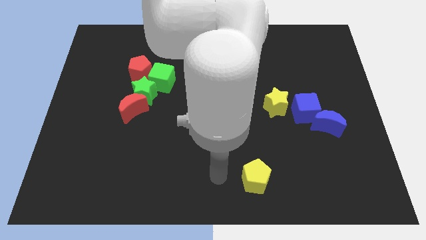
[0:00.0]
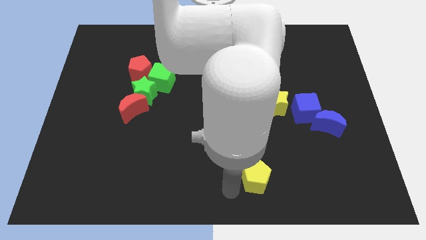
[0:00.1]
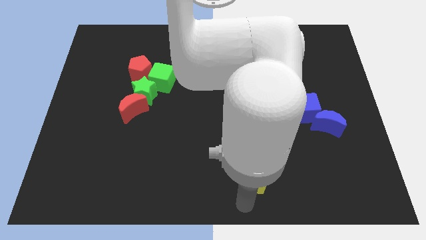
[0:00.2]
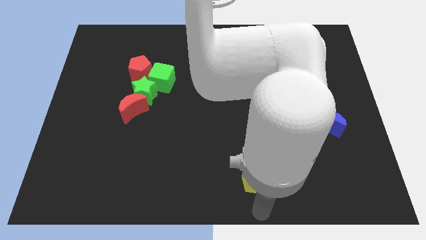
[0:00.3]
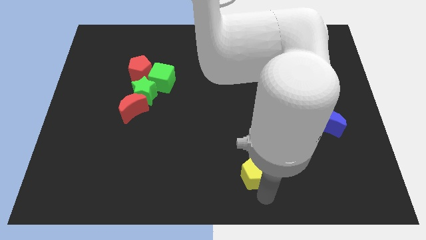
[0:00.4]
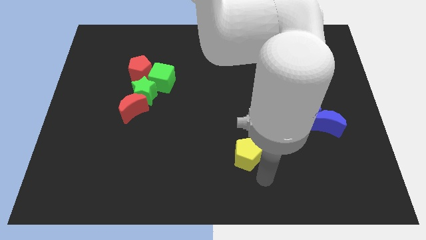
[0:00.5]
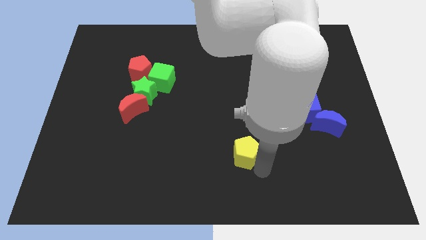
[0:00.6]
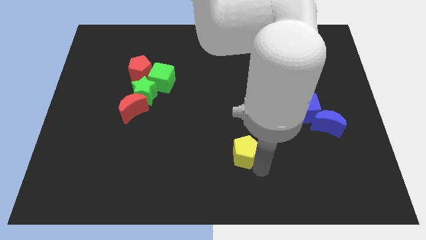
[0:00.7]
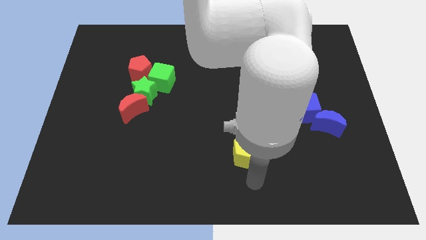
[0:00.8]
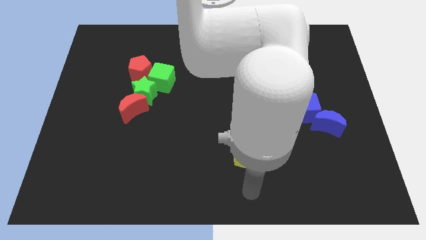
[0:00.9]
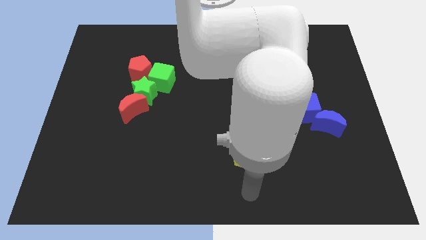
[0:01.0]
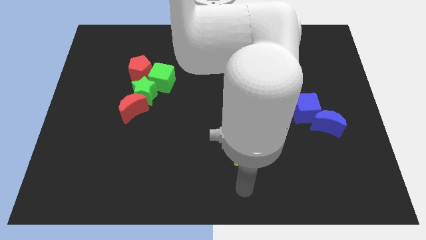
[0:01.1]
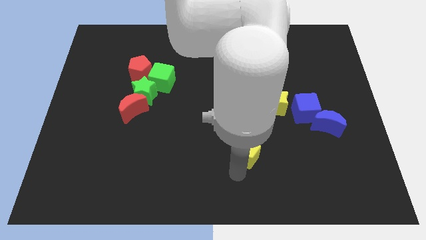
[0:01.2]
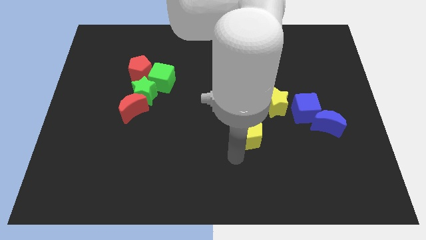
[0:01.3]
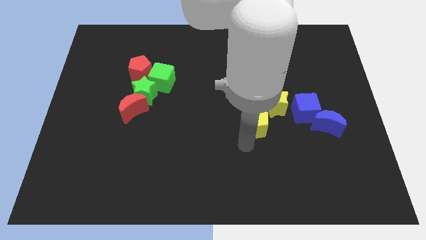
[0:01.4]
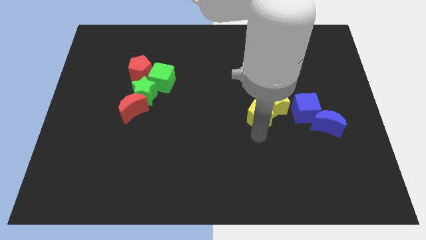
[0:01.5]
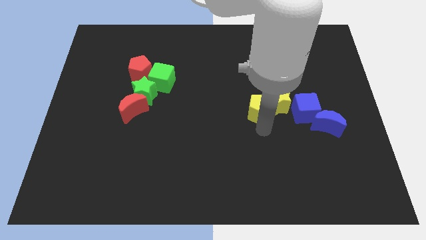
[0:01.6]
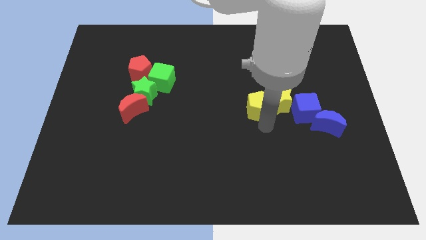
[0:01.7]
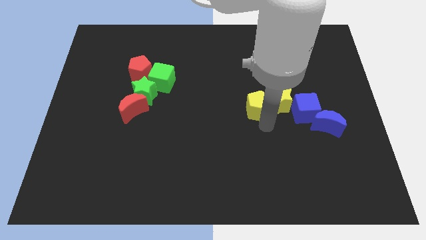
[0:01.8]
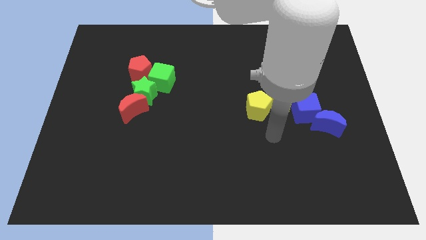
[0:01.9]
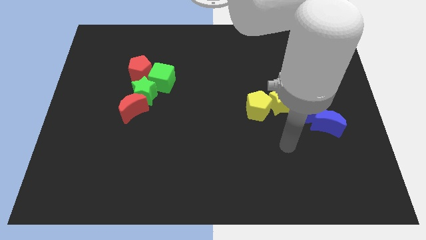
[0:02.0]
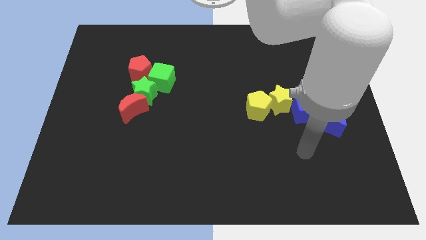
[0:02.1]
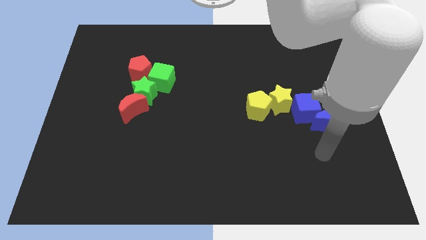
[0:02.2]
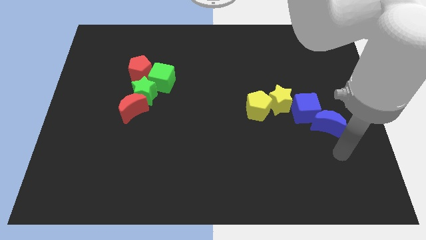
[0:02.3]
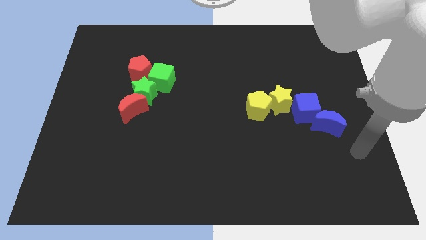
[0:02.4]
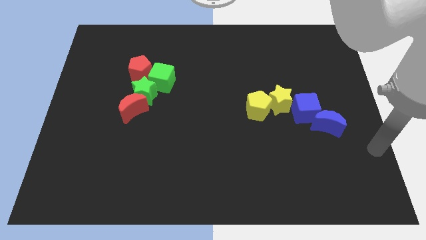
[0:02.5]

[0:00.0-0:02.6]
move the yellow pentagon into the yellow star

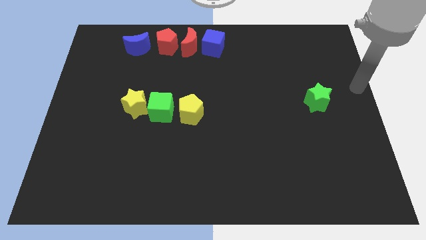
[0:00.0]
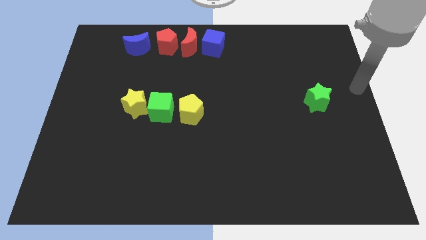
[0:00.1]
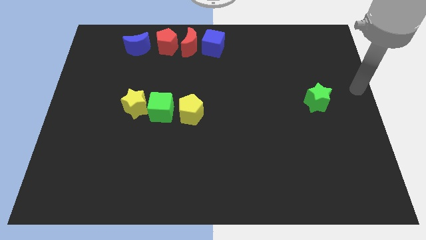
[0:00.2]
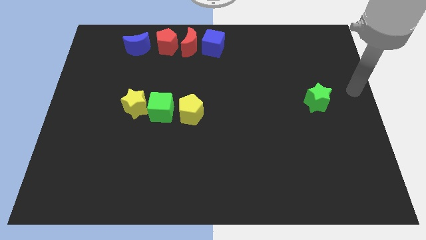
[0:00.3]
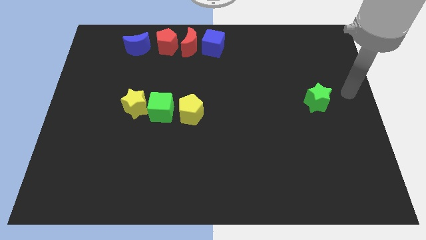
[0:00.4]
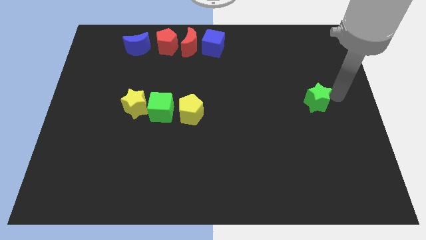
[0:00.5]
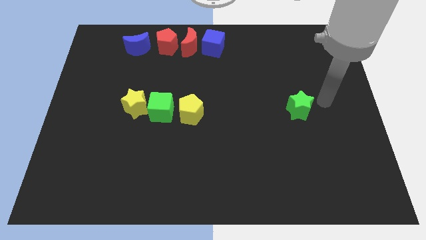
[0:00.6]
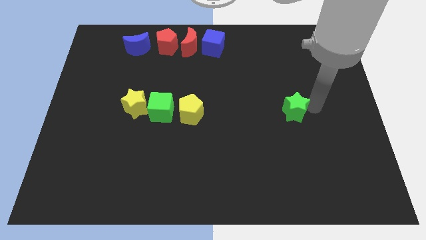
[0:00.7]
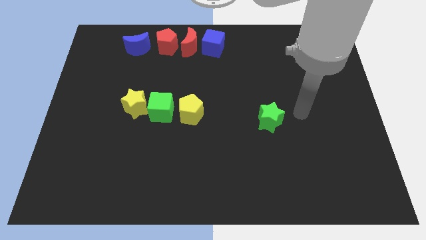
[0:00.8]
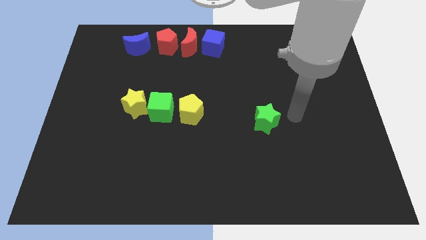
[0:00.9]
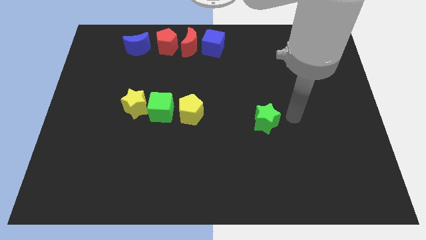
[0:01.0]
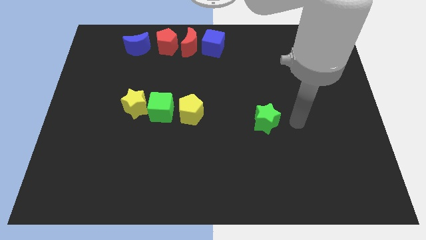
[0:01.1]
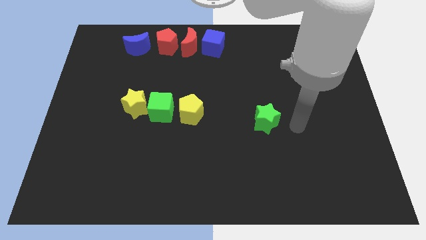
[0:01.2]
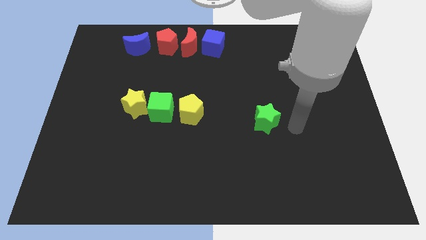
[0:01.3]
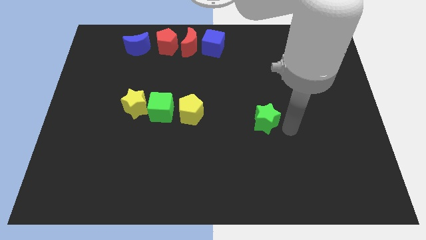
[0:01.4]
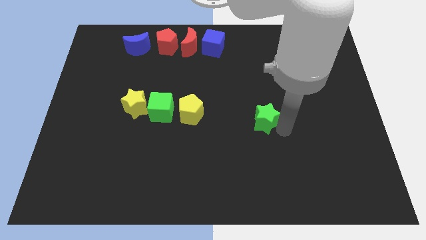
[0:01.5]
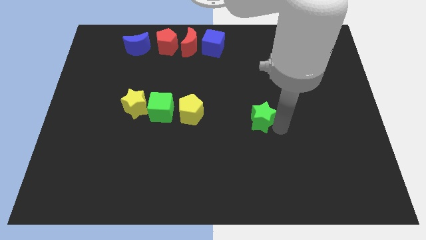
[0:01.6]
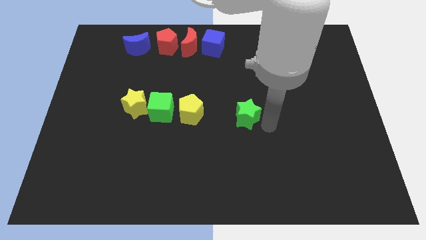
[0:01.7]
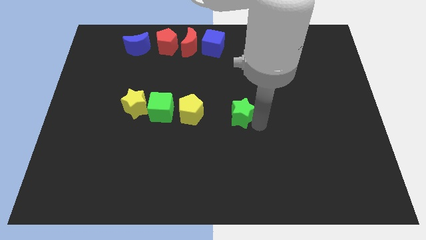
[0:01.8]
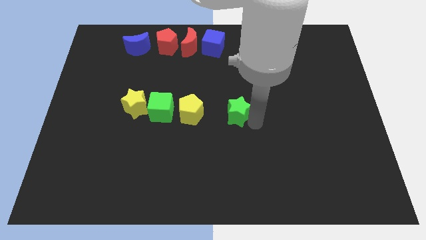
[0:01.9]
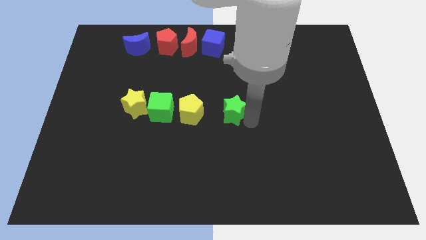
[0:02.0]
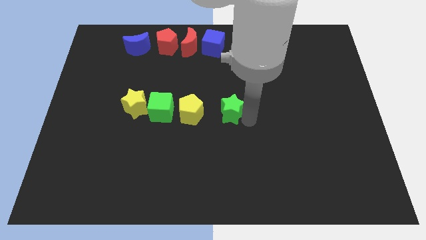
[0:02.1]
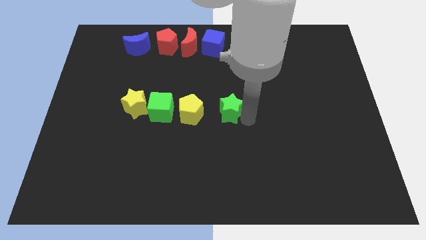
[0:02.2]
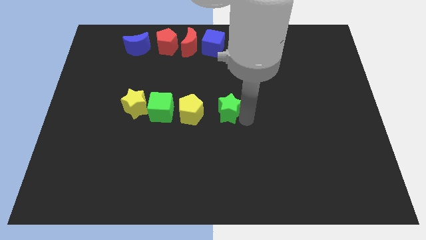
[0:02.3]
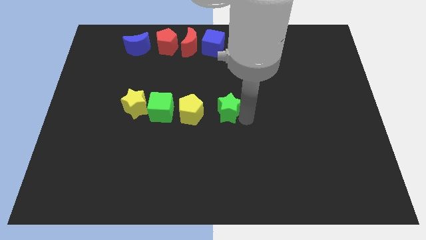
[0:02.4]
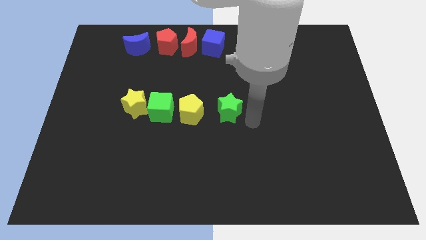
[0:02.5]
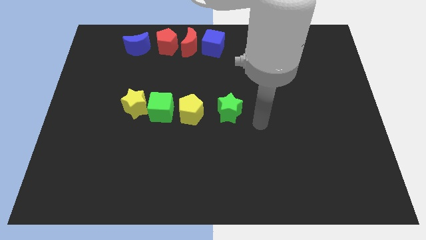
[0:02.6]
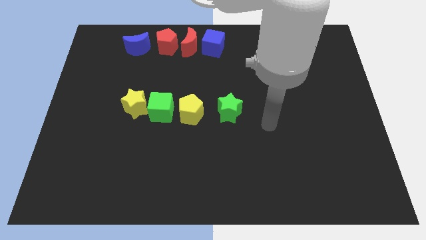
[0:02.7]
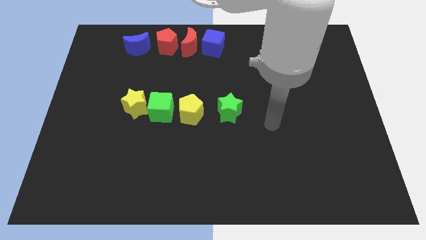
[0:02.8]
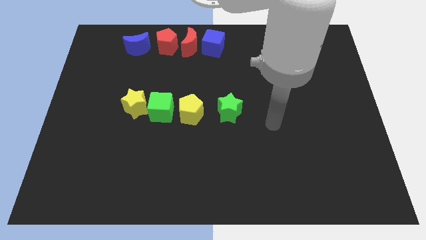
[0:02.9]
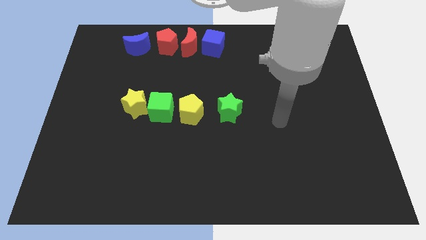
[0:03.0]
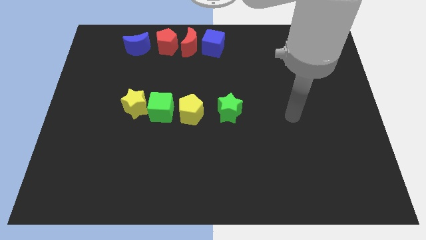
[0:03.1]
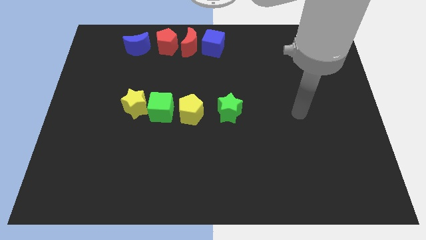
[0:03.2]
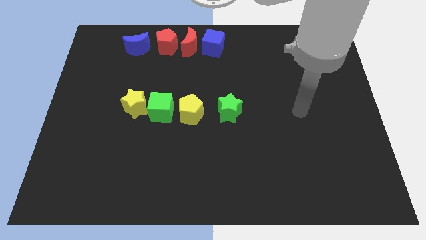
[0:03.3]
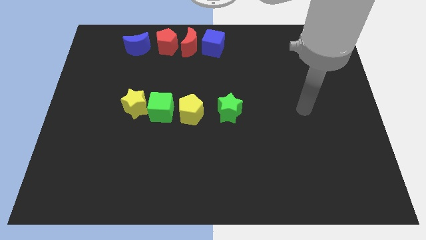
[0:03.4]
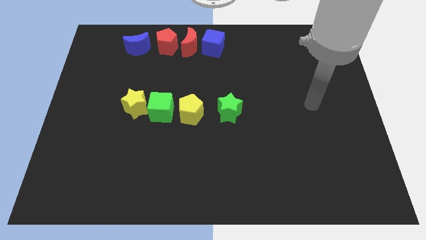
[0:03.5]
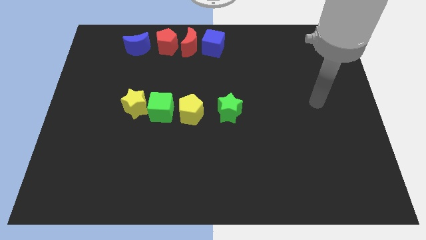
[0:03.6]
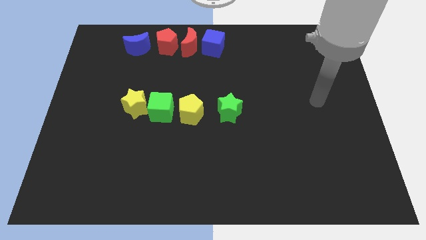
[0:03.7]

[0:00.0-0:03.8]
push green star to the right of yellow pentagon

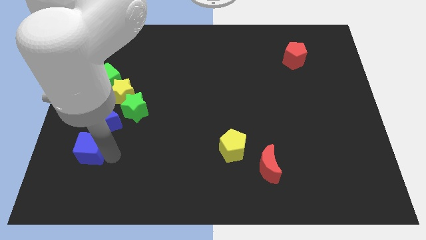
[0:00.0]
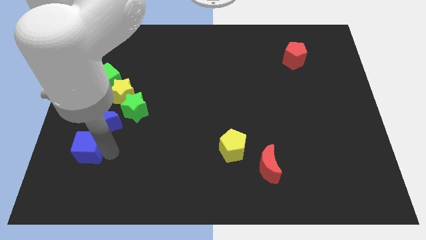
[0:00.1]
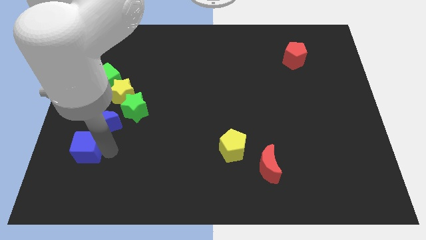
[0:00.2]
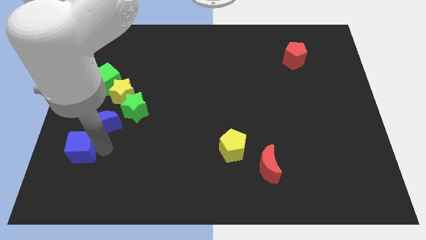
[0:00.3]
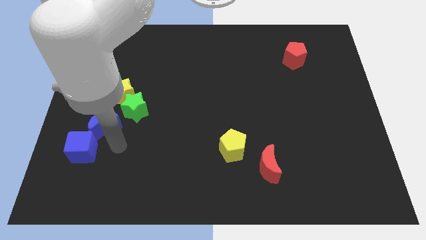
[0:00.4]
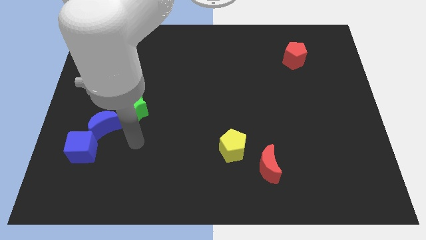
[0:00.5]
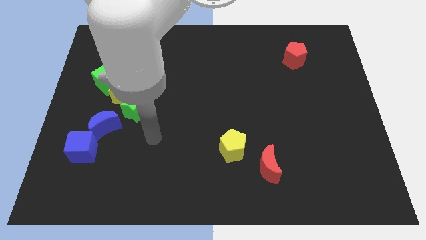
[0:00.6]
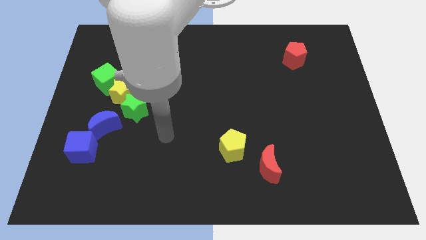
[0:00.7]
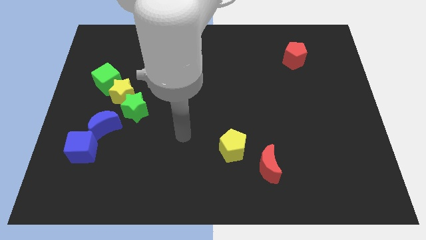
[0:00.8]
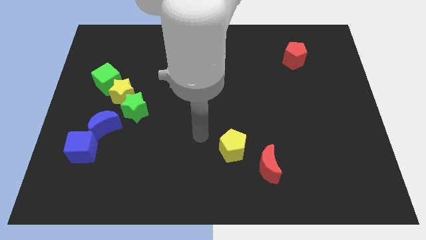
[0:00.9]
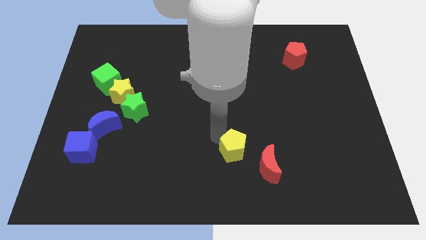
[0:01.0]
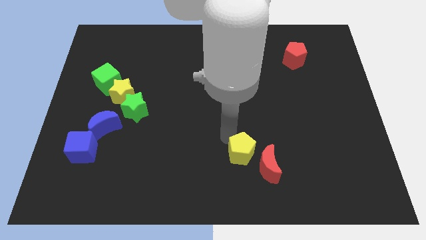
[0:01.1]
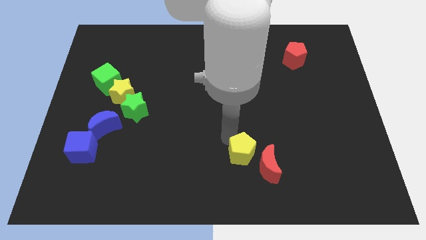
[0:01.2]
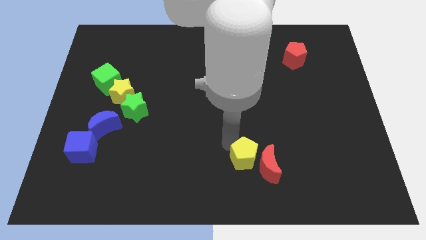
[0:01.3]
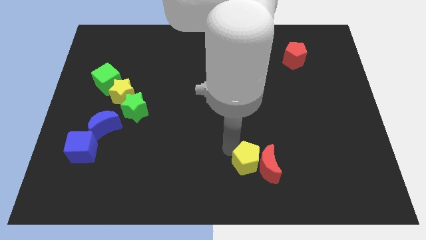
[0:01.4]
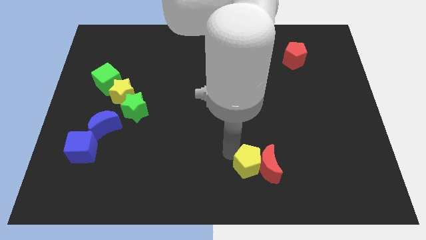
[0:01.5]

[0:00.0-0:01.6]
move your arm away from blue cube

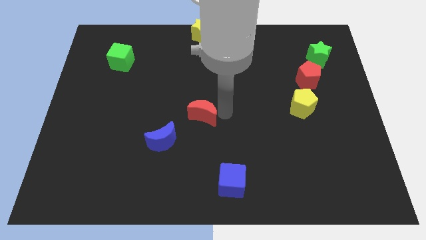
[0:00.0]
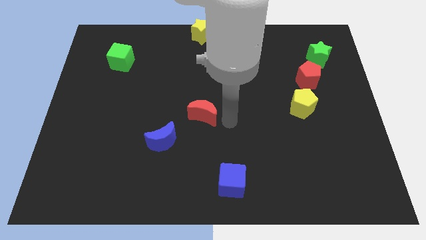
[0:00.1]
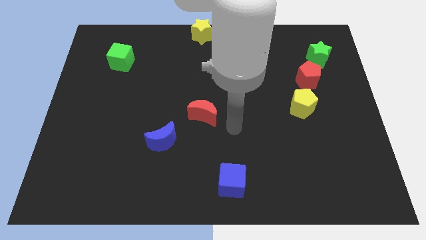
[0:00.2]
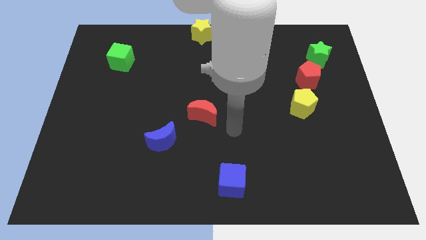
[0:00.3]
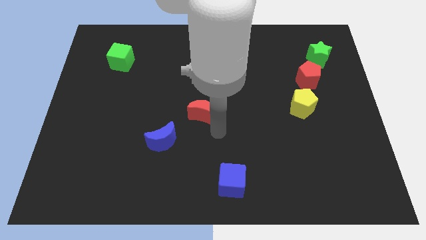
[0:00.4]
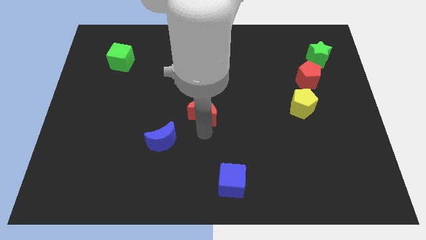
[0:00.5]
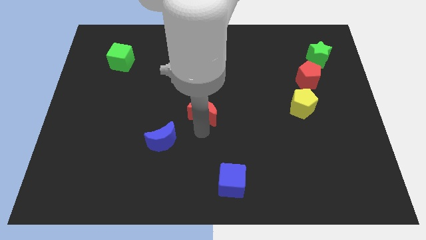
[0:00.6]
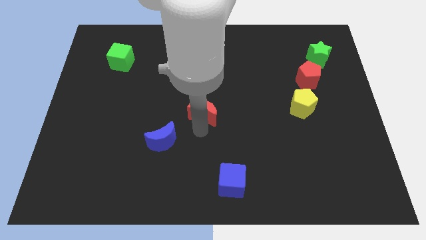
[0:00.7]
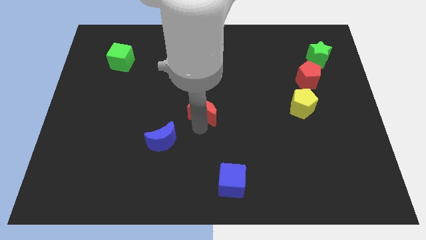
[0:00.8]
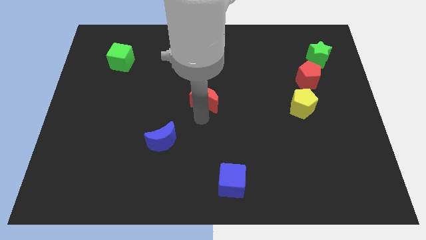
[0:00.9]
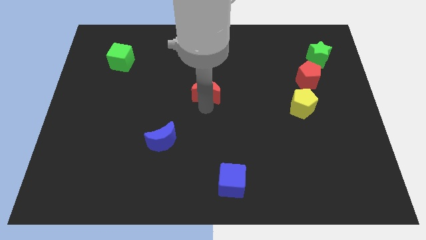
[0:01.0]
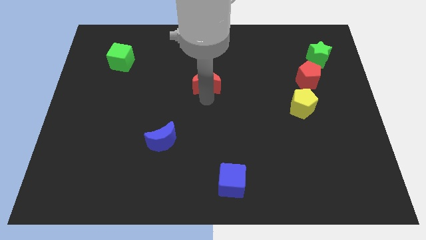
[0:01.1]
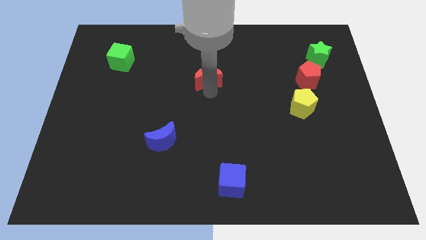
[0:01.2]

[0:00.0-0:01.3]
push the red moon slightly towards the top center of the board
